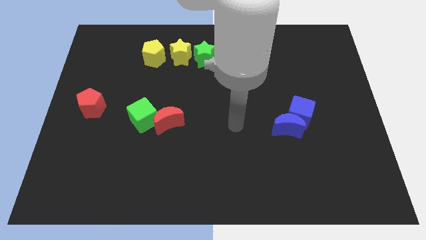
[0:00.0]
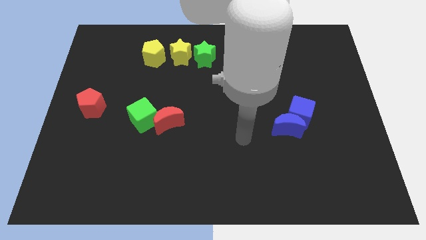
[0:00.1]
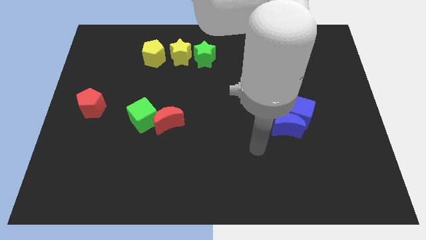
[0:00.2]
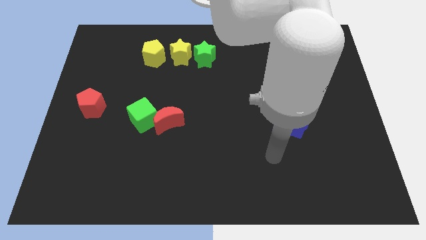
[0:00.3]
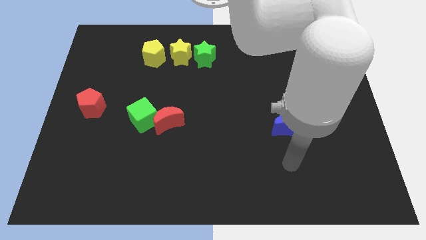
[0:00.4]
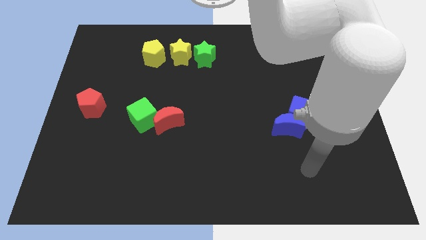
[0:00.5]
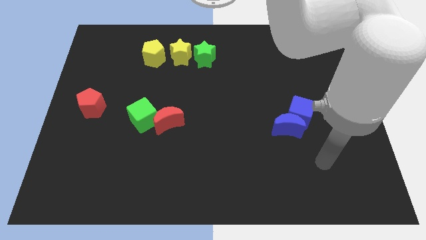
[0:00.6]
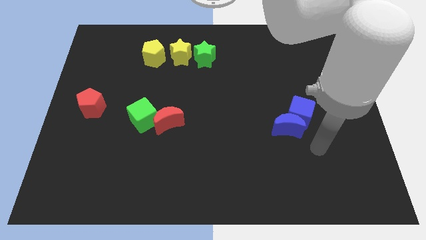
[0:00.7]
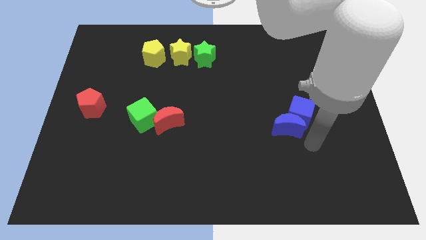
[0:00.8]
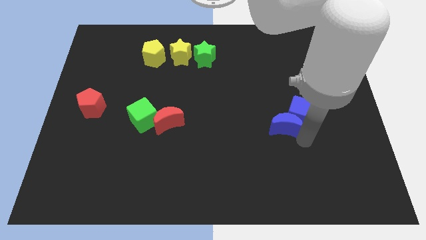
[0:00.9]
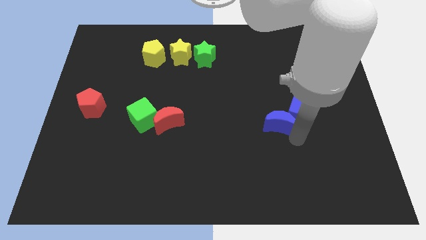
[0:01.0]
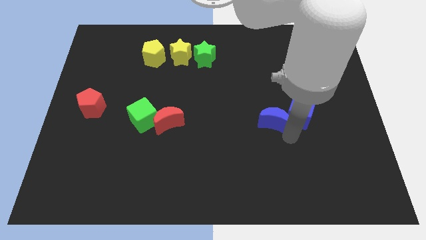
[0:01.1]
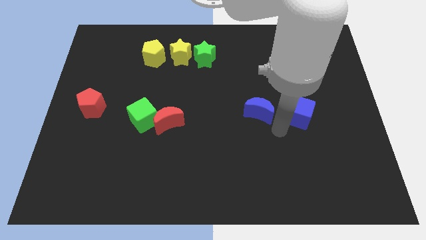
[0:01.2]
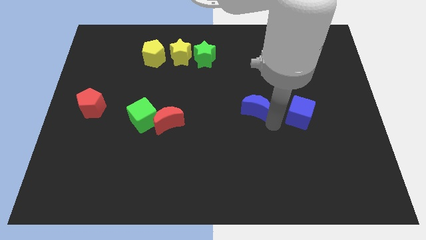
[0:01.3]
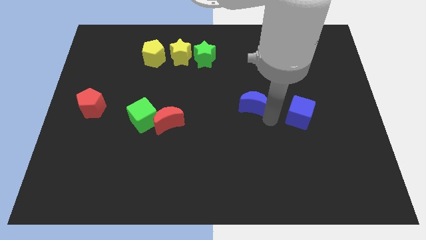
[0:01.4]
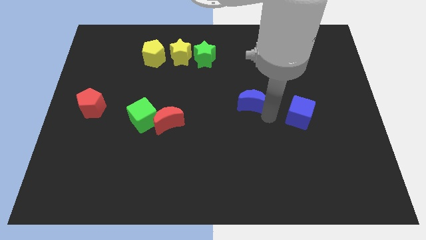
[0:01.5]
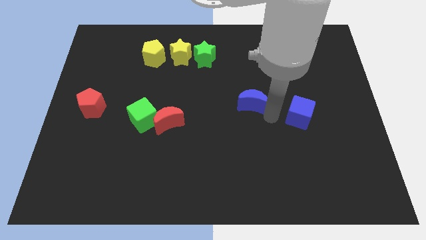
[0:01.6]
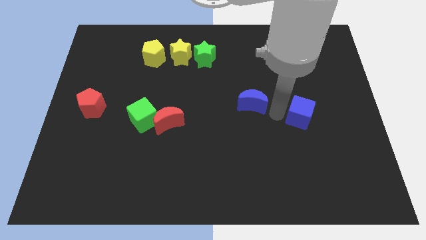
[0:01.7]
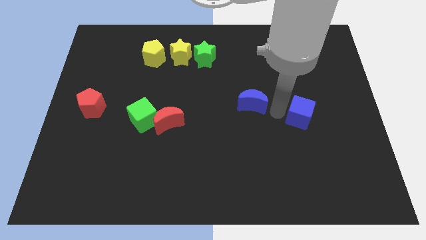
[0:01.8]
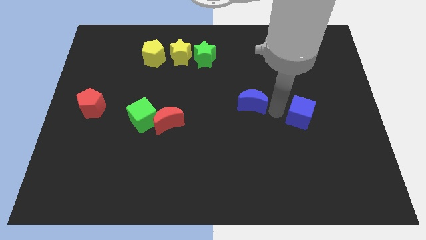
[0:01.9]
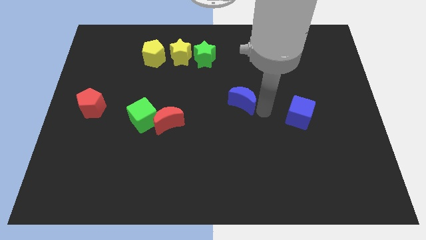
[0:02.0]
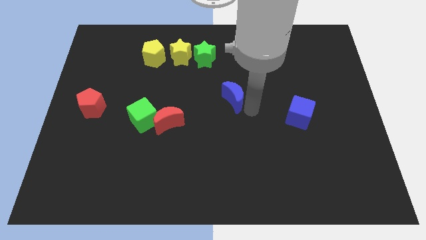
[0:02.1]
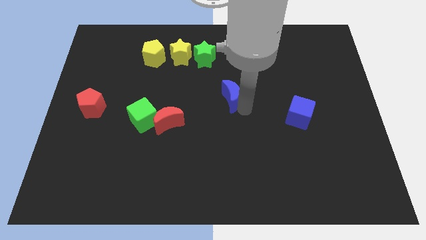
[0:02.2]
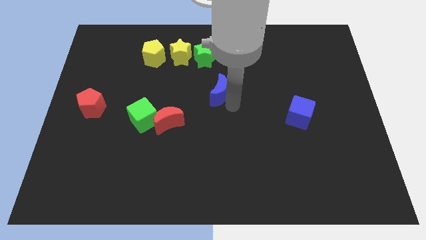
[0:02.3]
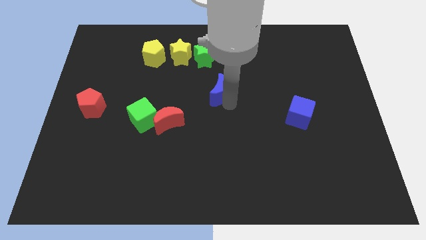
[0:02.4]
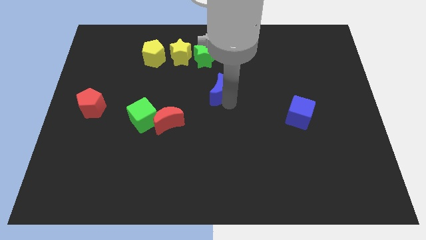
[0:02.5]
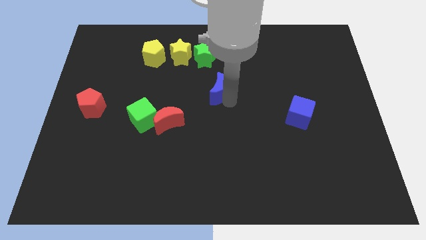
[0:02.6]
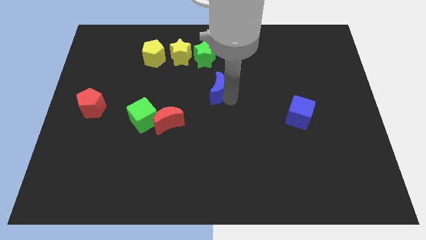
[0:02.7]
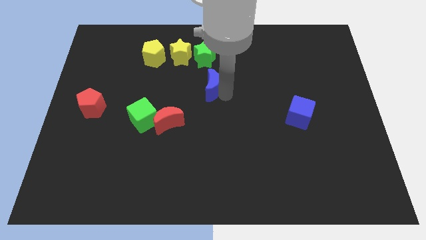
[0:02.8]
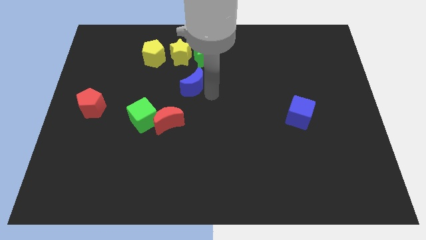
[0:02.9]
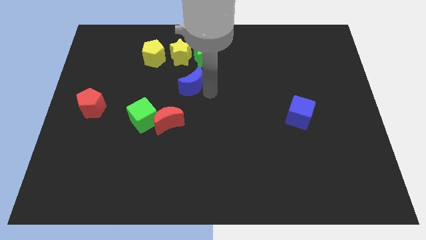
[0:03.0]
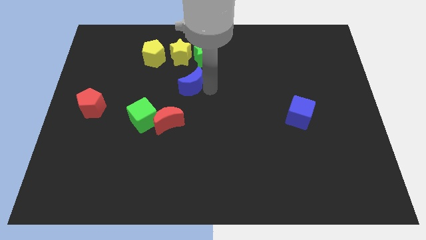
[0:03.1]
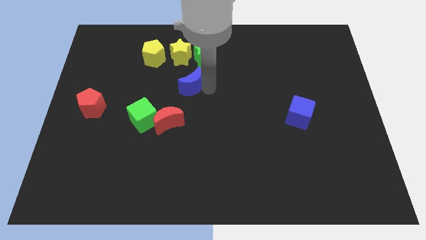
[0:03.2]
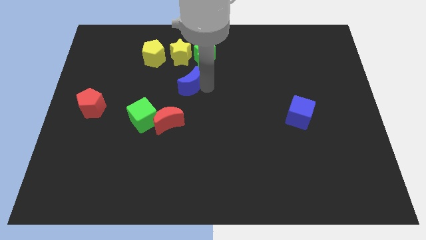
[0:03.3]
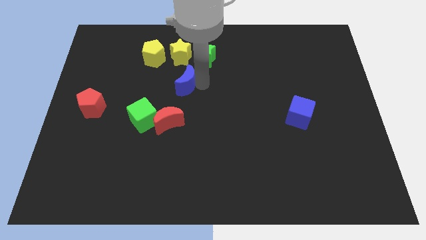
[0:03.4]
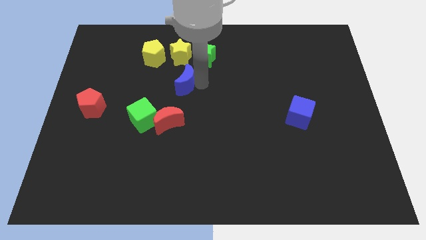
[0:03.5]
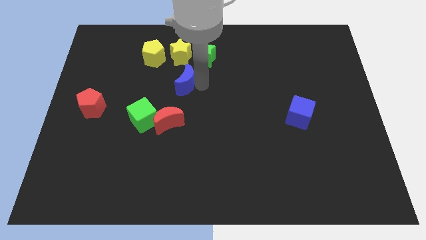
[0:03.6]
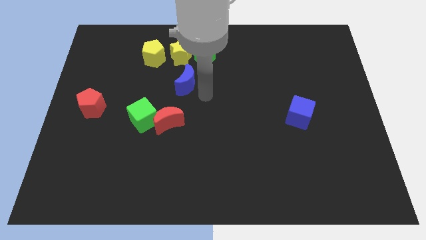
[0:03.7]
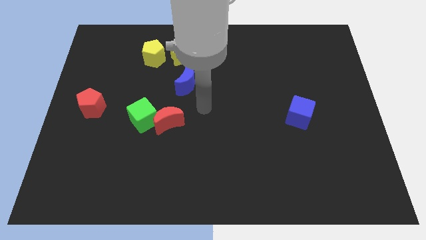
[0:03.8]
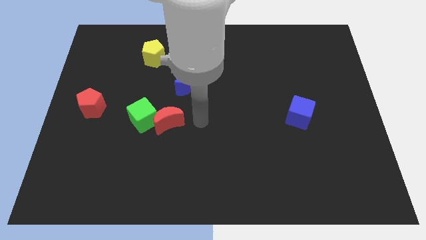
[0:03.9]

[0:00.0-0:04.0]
move the blue moon to the bottom side of the yellow star

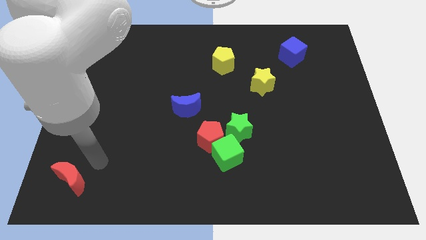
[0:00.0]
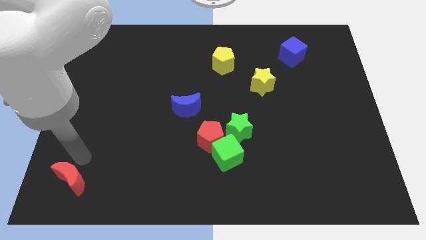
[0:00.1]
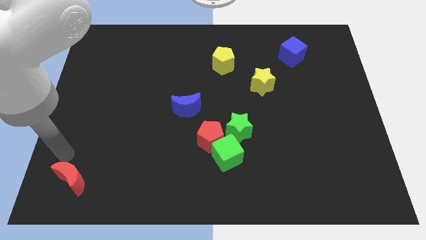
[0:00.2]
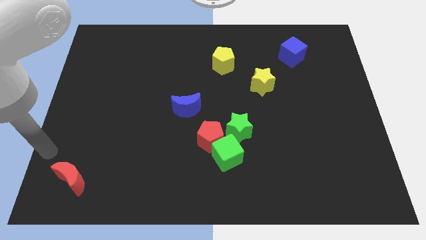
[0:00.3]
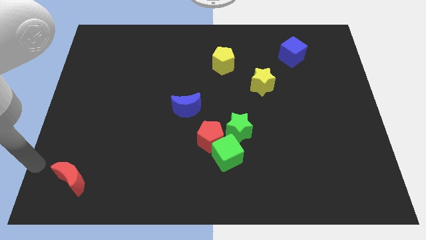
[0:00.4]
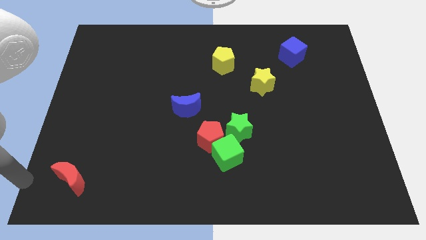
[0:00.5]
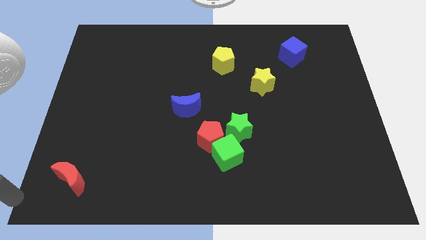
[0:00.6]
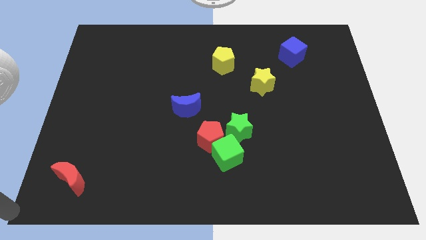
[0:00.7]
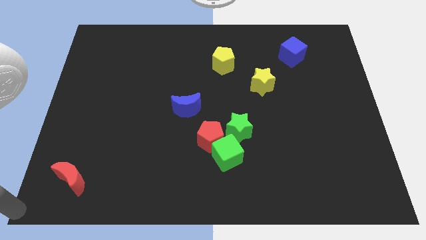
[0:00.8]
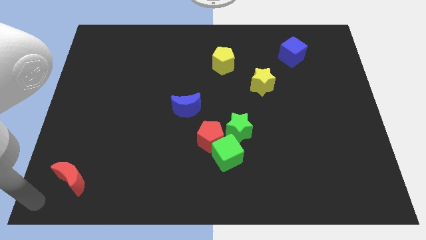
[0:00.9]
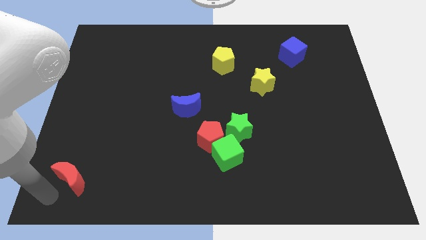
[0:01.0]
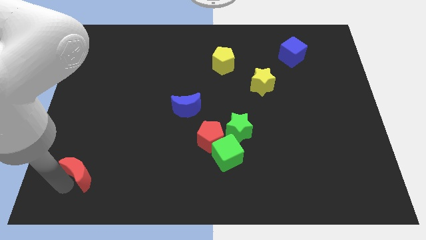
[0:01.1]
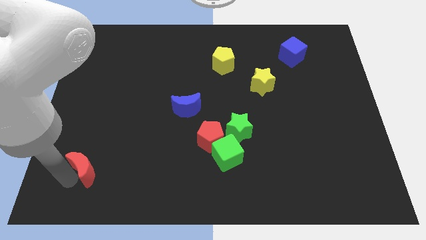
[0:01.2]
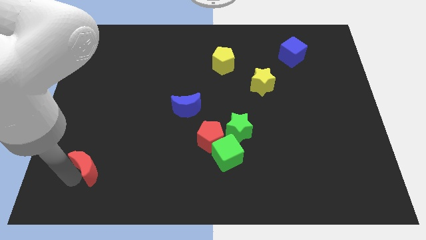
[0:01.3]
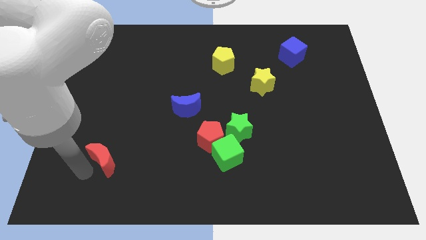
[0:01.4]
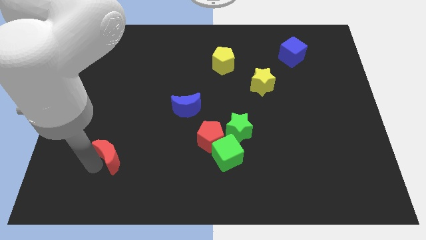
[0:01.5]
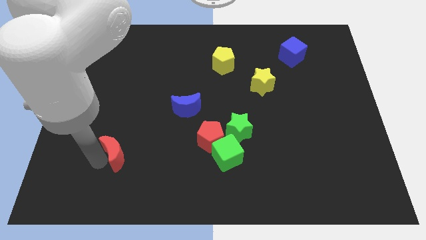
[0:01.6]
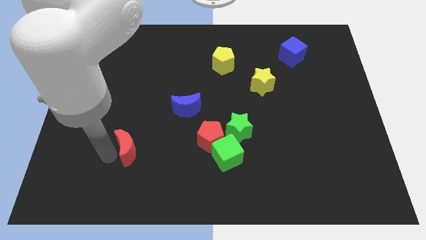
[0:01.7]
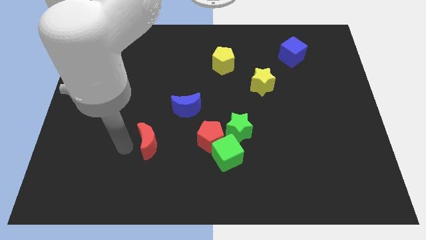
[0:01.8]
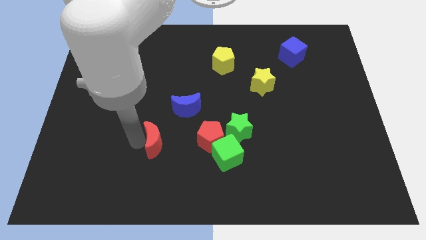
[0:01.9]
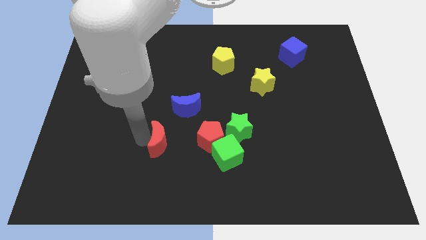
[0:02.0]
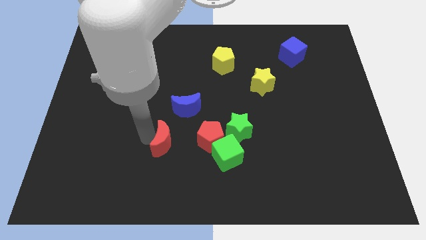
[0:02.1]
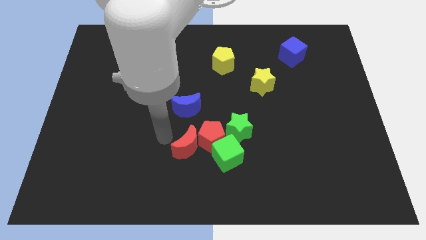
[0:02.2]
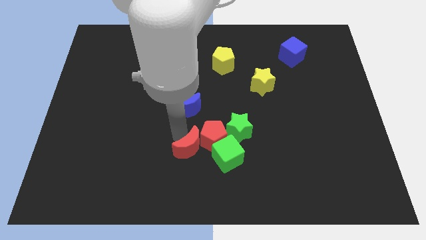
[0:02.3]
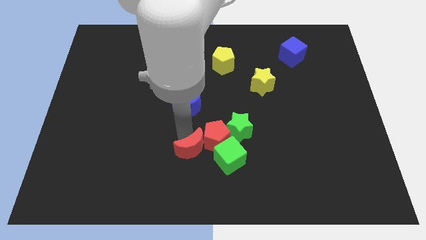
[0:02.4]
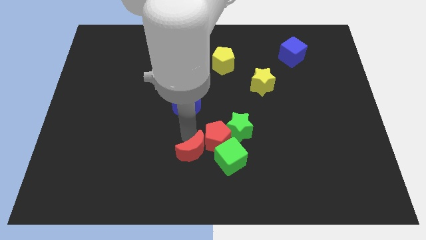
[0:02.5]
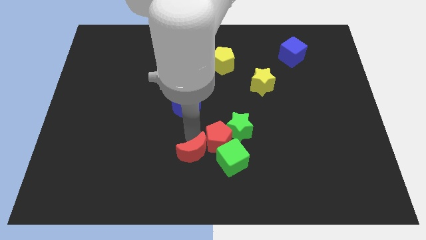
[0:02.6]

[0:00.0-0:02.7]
push the red half moon towards red pentagon

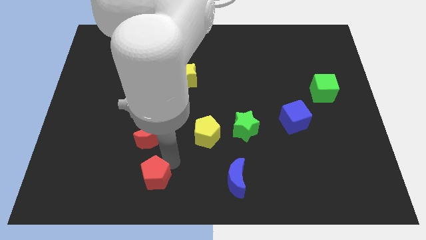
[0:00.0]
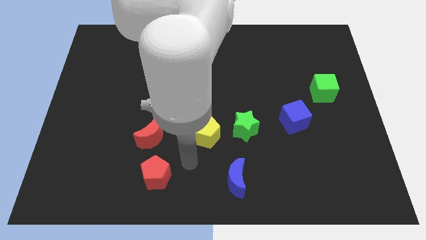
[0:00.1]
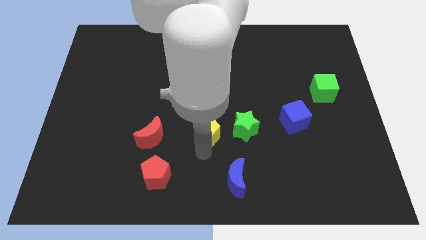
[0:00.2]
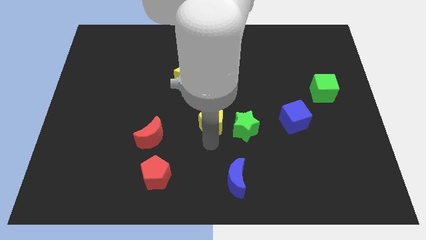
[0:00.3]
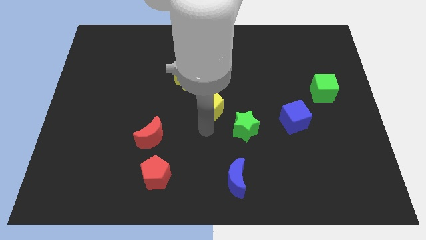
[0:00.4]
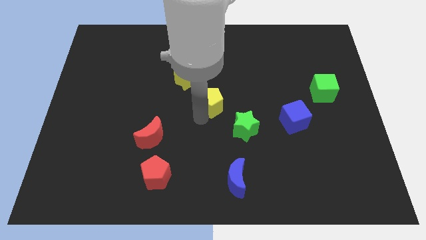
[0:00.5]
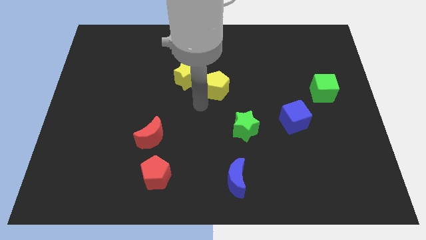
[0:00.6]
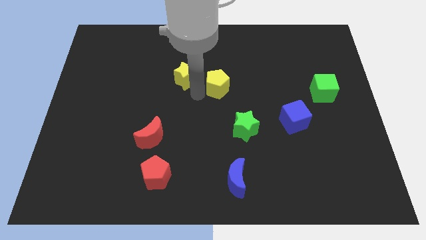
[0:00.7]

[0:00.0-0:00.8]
push the yellow pentagon to the right of the yellow star

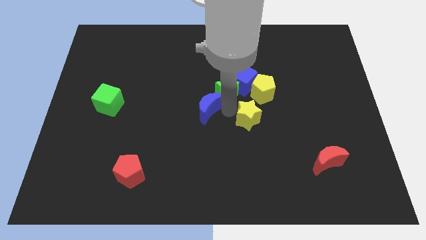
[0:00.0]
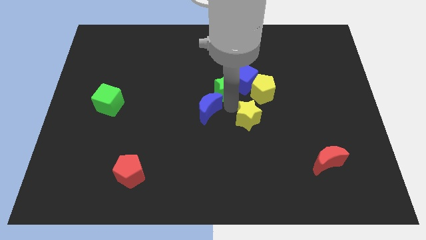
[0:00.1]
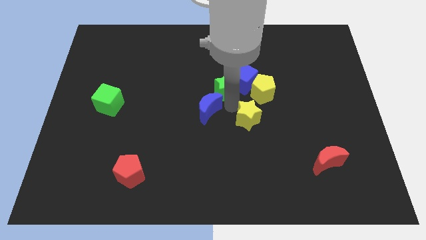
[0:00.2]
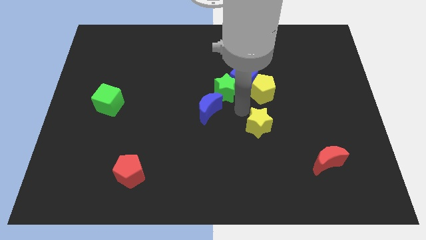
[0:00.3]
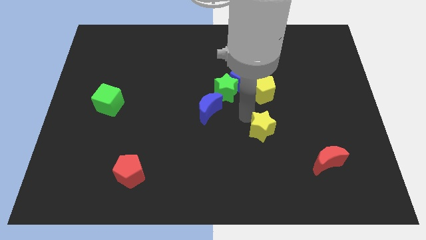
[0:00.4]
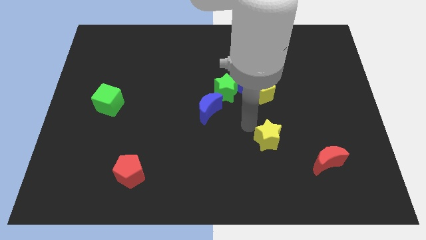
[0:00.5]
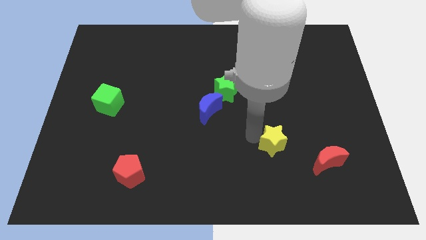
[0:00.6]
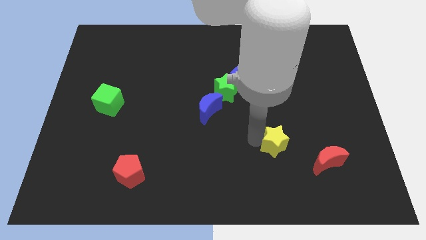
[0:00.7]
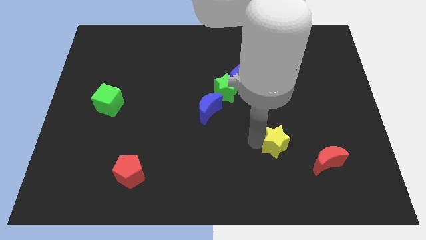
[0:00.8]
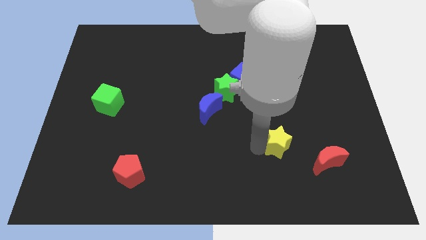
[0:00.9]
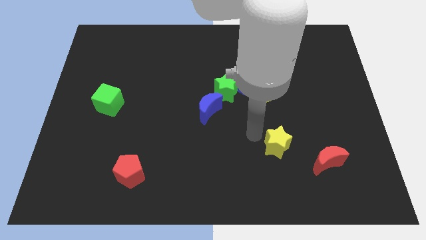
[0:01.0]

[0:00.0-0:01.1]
move the yellow star towards the red moon

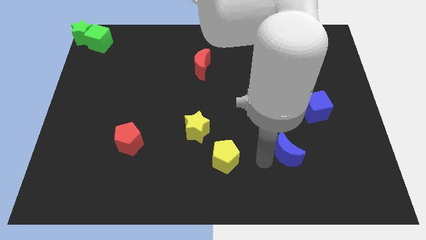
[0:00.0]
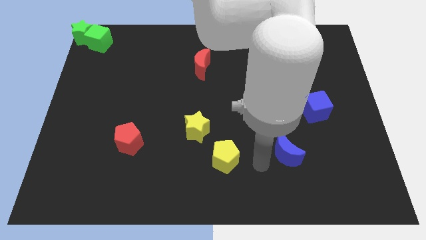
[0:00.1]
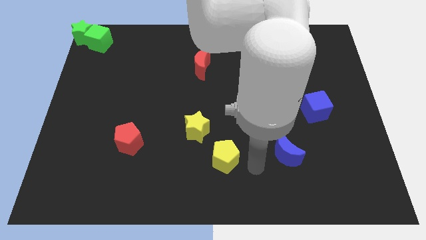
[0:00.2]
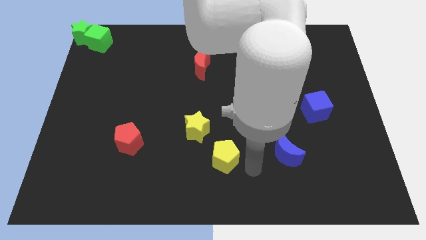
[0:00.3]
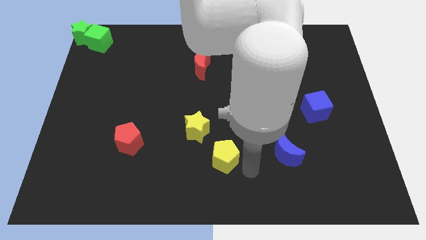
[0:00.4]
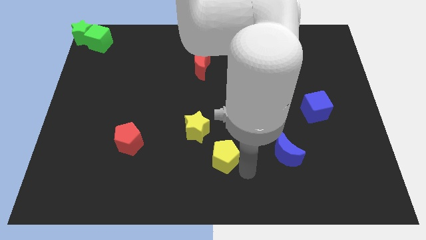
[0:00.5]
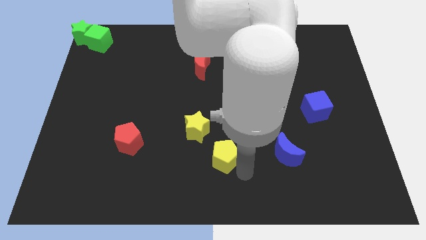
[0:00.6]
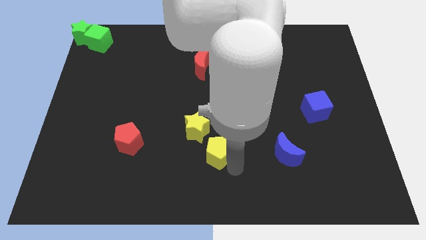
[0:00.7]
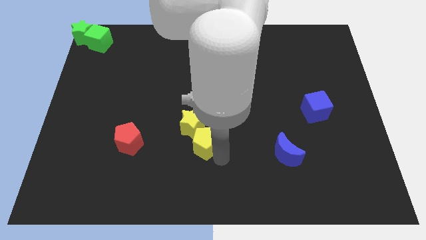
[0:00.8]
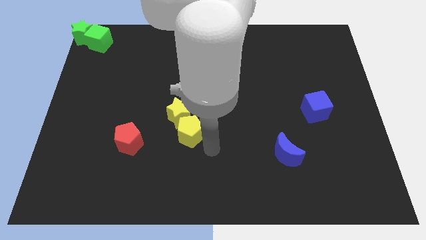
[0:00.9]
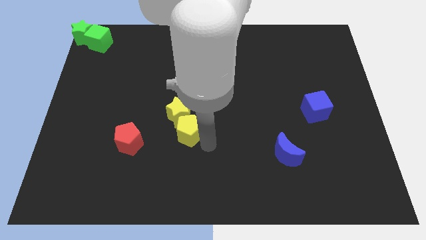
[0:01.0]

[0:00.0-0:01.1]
move the yellow pentagon into the bottom side of the yellow star
